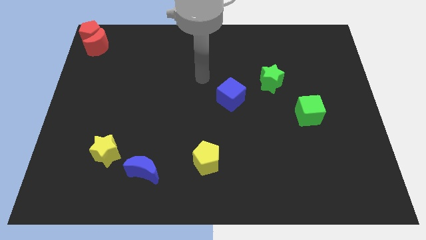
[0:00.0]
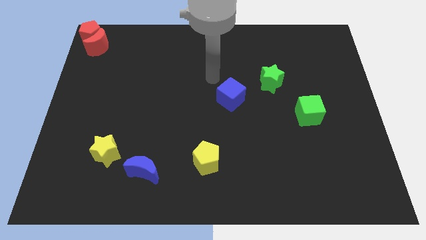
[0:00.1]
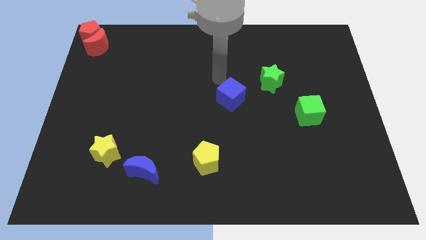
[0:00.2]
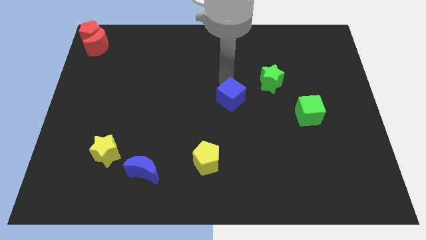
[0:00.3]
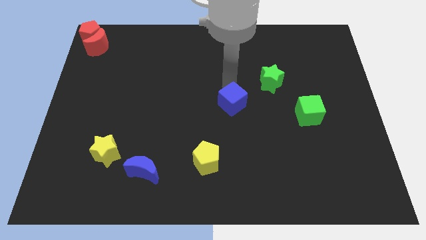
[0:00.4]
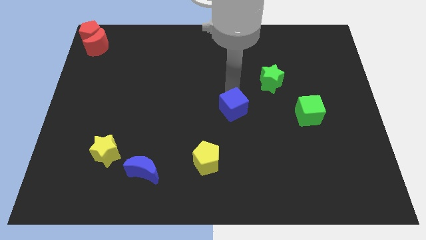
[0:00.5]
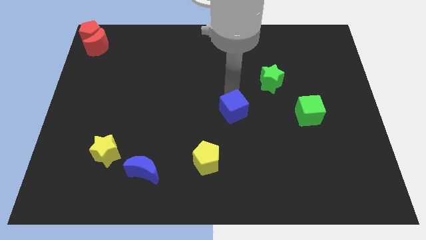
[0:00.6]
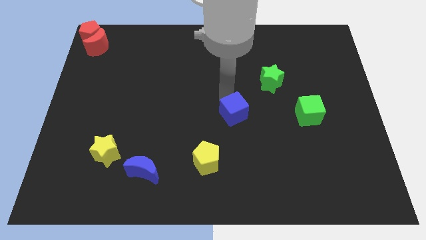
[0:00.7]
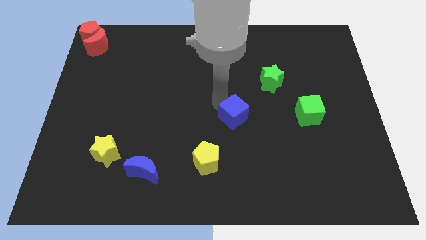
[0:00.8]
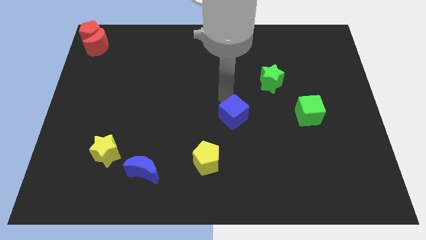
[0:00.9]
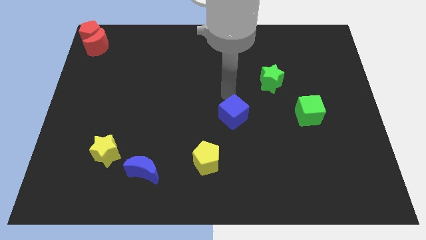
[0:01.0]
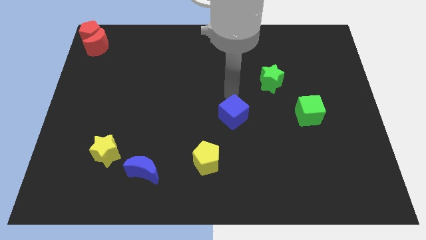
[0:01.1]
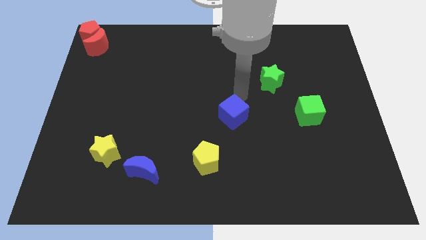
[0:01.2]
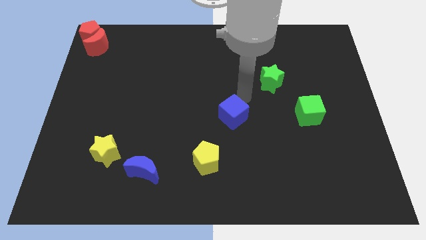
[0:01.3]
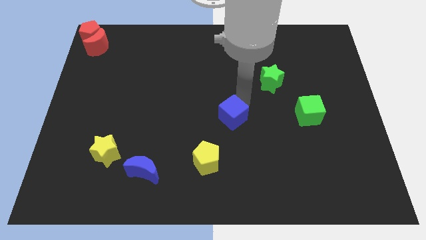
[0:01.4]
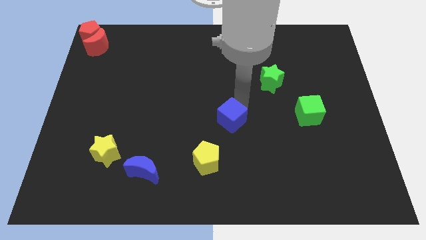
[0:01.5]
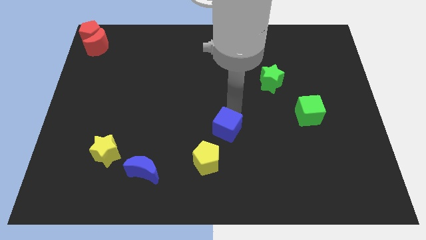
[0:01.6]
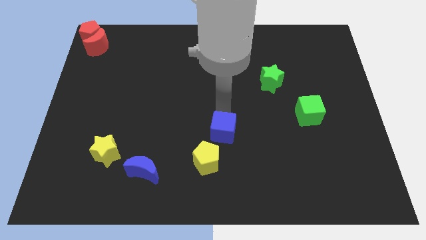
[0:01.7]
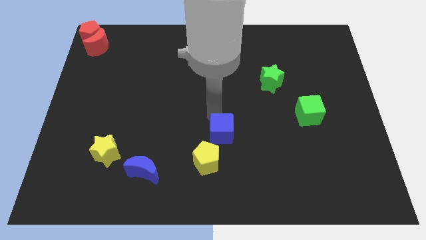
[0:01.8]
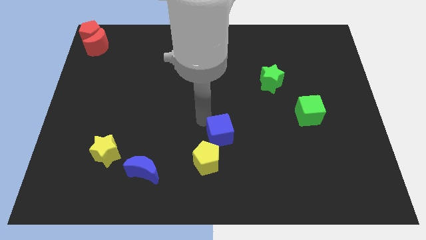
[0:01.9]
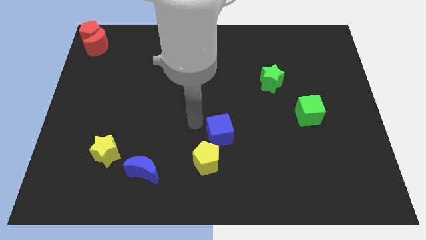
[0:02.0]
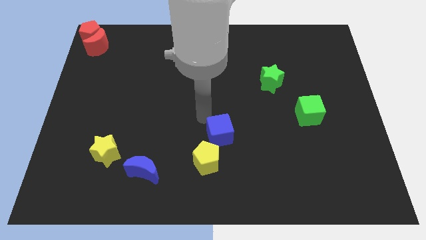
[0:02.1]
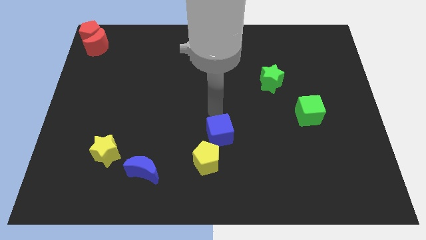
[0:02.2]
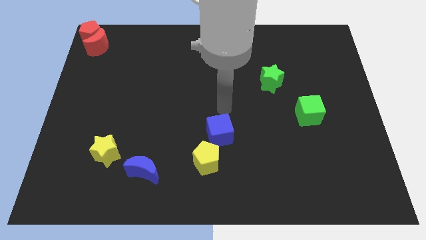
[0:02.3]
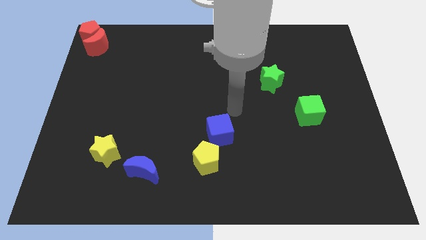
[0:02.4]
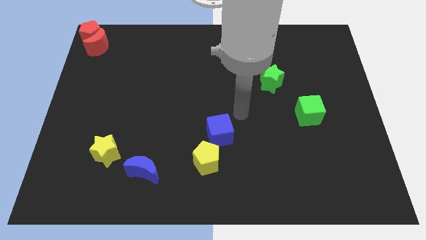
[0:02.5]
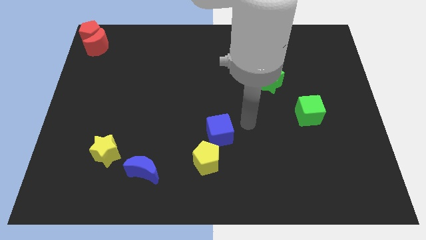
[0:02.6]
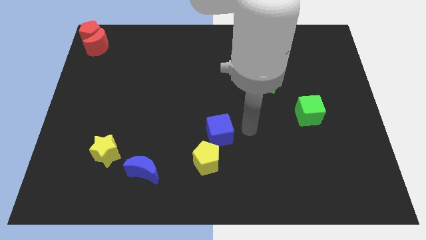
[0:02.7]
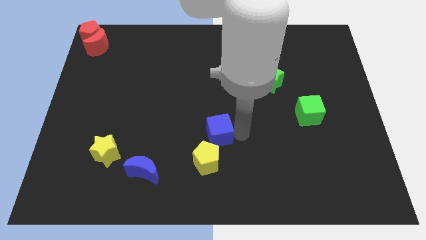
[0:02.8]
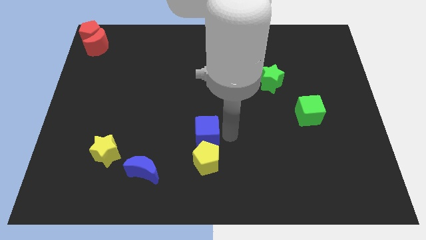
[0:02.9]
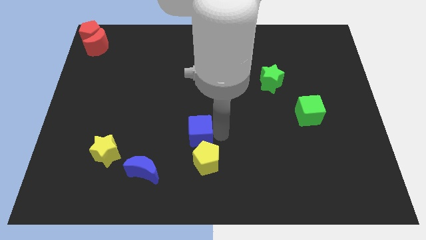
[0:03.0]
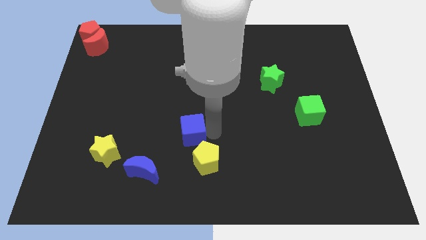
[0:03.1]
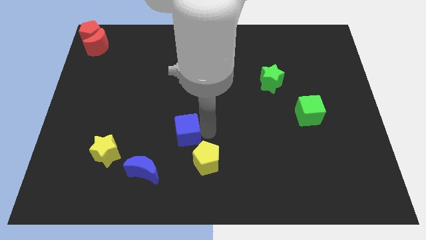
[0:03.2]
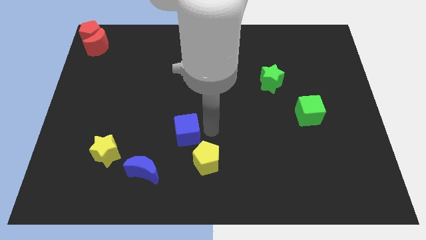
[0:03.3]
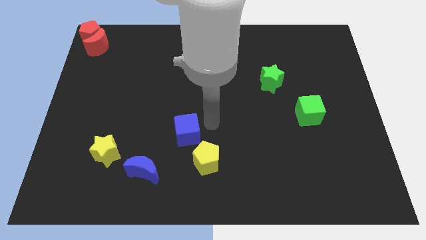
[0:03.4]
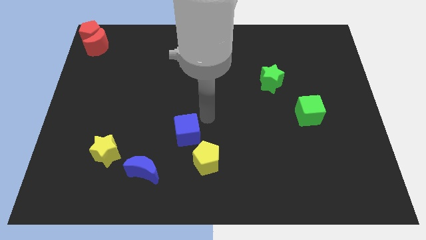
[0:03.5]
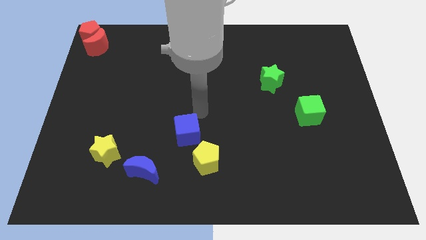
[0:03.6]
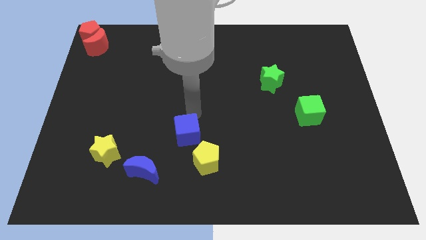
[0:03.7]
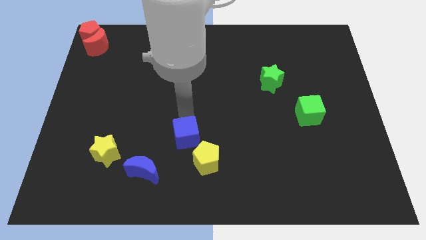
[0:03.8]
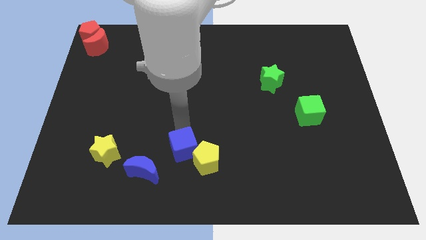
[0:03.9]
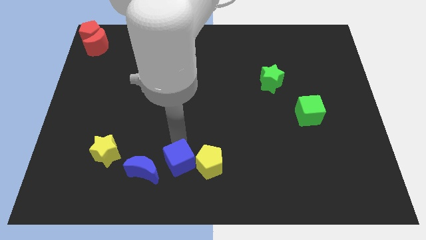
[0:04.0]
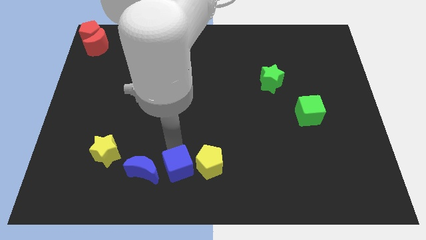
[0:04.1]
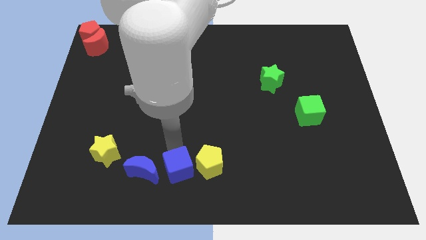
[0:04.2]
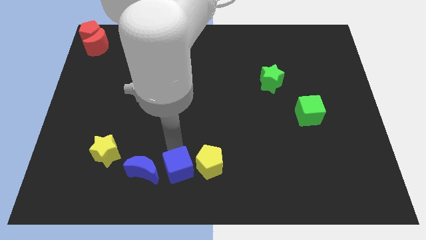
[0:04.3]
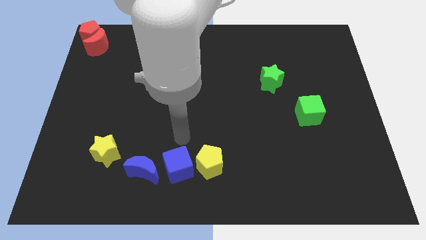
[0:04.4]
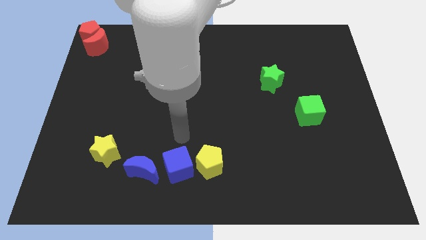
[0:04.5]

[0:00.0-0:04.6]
place the blue cube in between the yellow pentagon and blue crescent

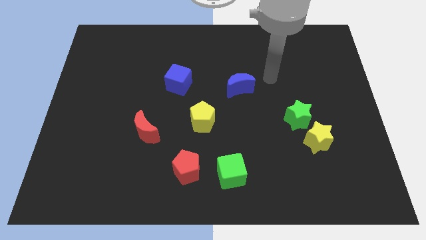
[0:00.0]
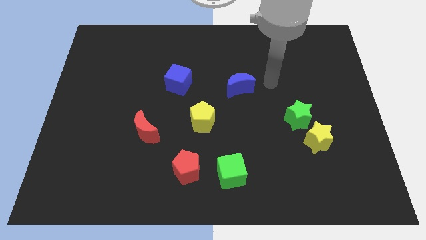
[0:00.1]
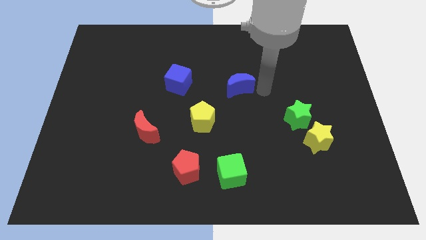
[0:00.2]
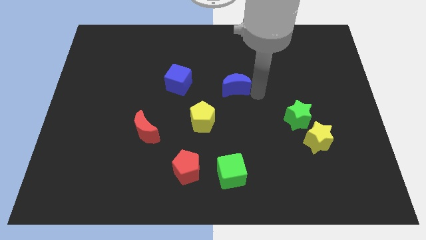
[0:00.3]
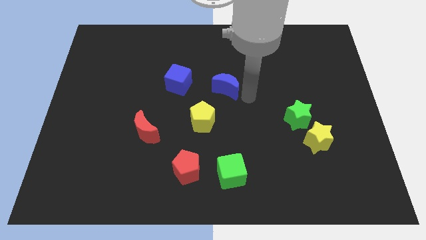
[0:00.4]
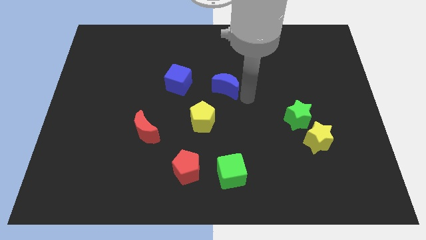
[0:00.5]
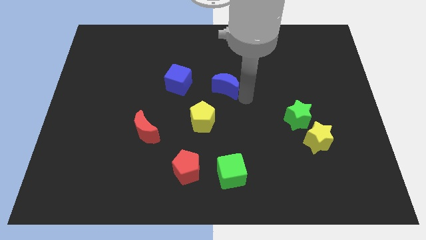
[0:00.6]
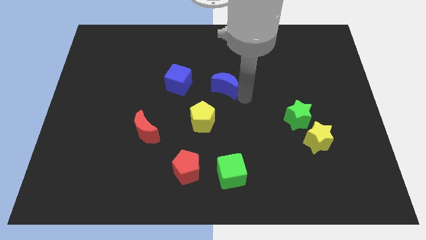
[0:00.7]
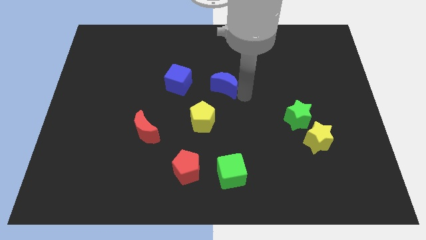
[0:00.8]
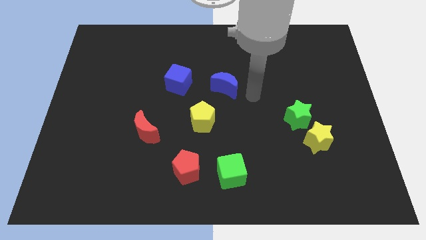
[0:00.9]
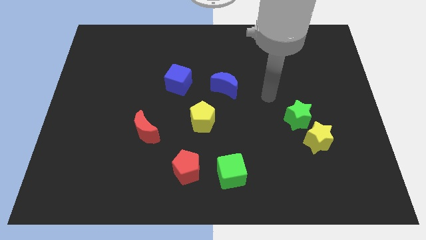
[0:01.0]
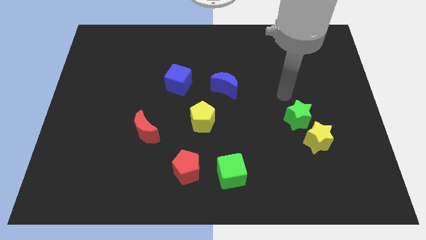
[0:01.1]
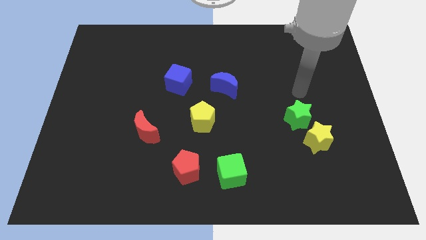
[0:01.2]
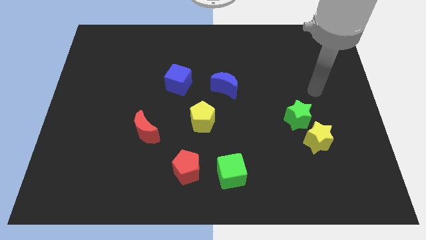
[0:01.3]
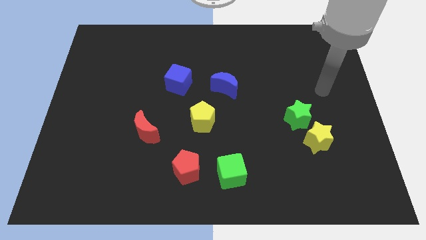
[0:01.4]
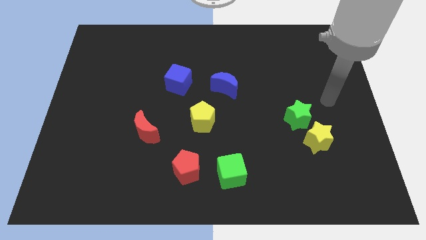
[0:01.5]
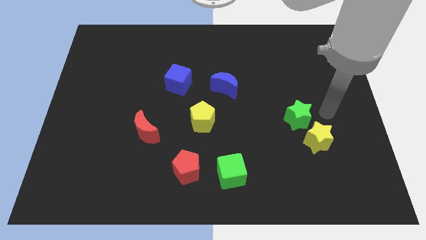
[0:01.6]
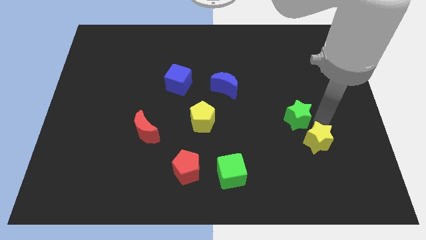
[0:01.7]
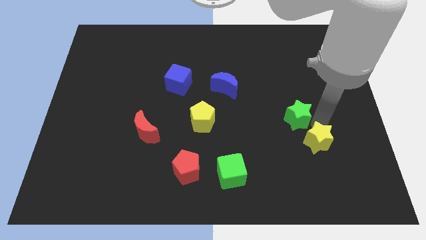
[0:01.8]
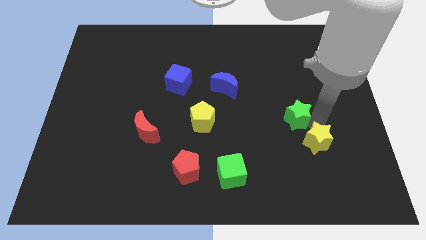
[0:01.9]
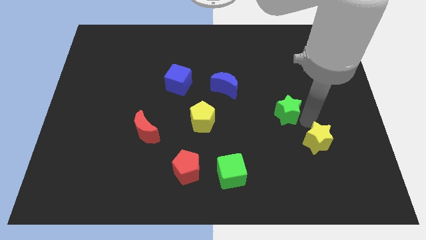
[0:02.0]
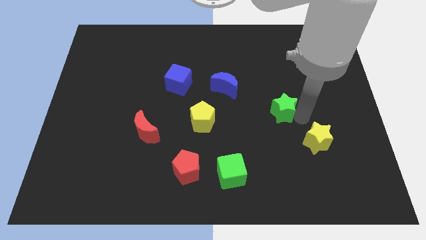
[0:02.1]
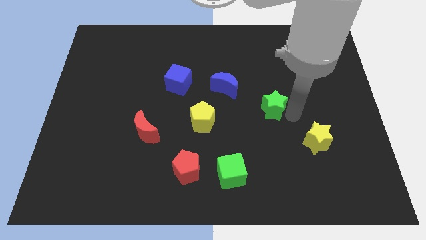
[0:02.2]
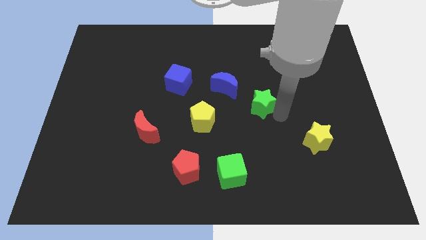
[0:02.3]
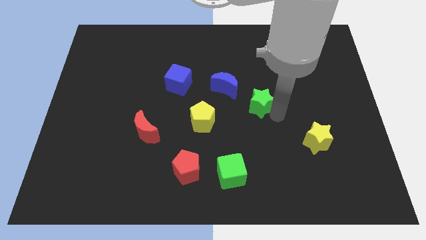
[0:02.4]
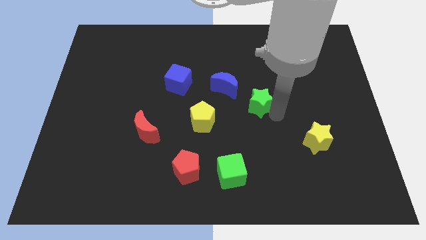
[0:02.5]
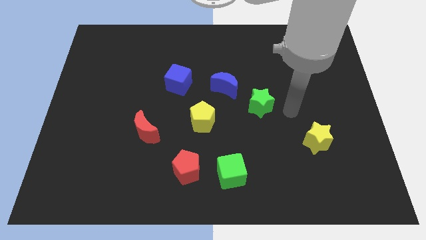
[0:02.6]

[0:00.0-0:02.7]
place the green star diagonally top left to the yellow star

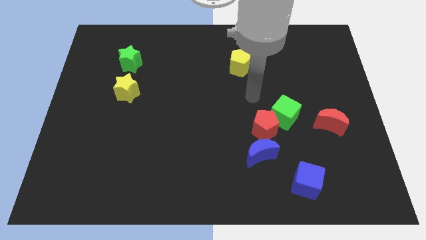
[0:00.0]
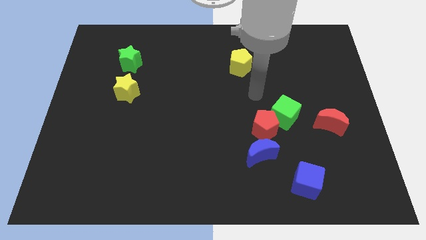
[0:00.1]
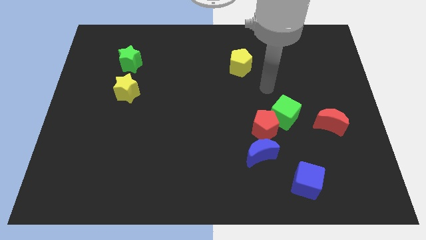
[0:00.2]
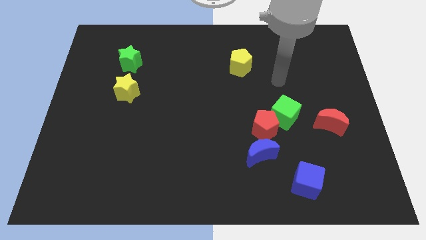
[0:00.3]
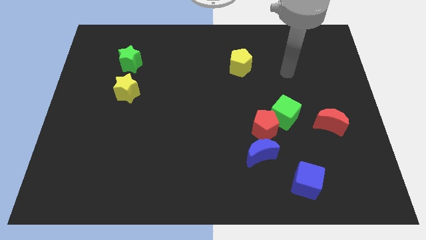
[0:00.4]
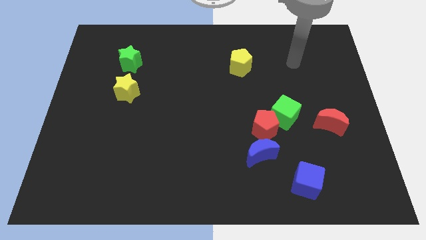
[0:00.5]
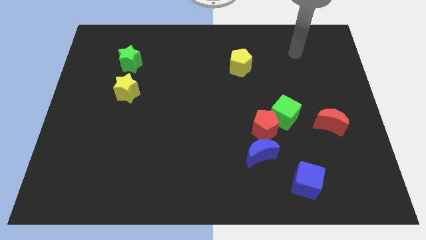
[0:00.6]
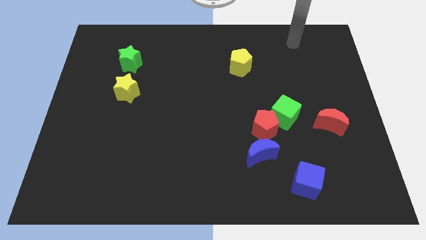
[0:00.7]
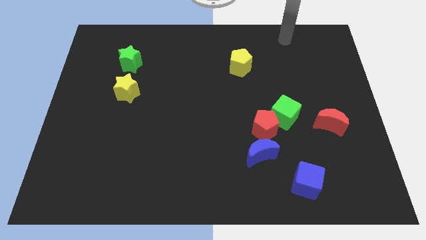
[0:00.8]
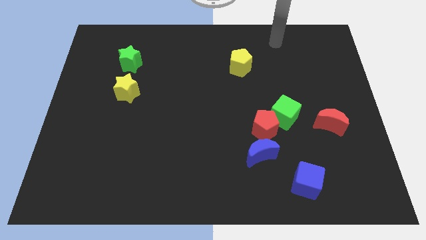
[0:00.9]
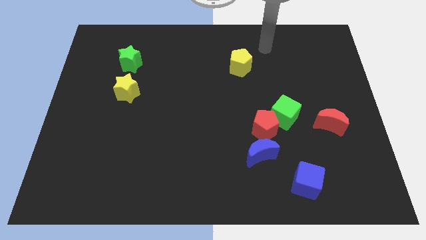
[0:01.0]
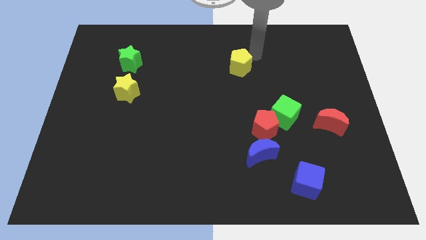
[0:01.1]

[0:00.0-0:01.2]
place your hand at the top right corner of the yellow pentagon

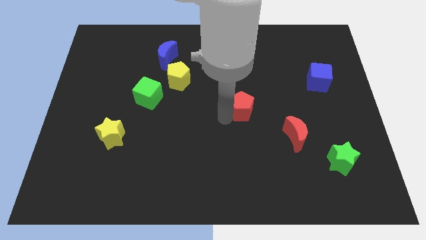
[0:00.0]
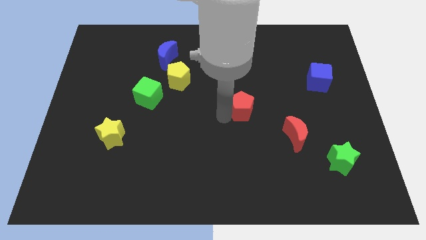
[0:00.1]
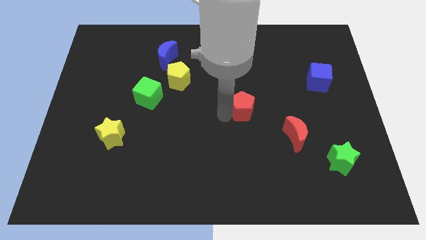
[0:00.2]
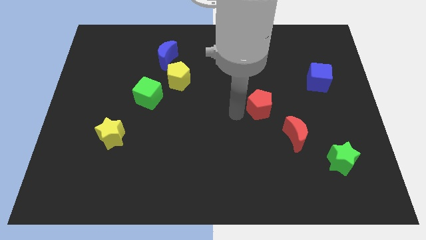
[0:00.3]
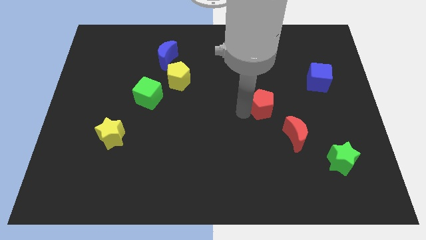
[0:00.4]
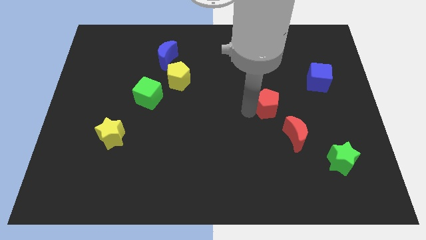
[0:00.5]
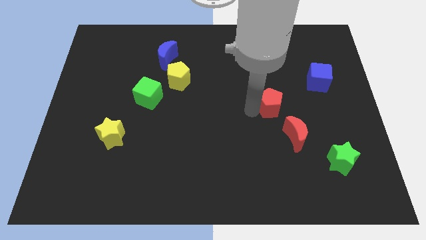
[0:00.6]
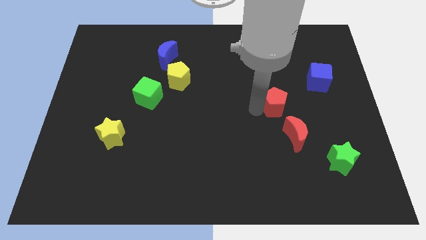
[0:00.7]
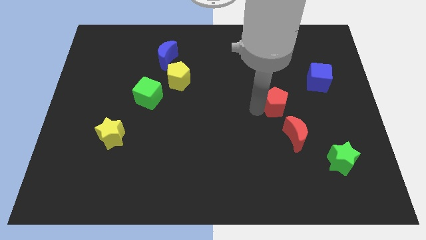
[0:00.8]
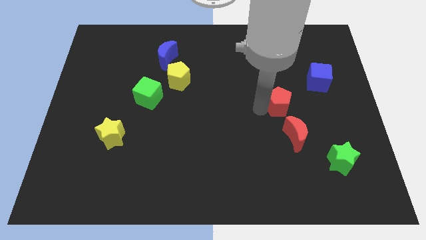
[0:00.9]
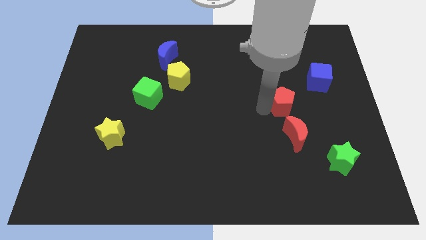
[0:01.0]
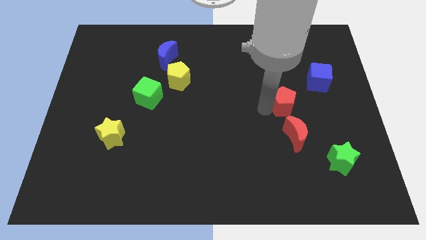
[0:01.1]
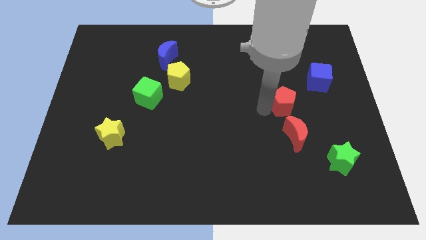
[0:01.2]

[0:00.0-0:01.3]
move the red pentagon above the red crescent
